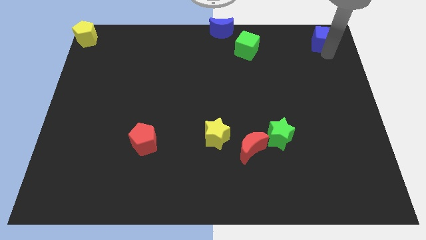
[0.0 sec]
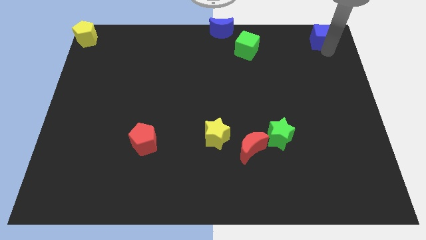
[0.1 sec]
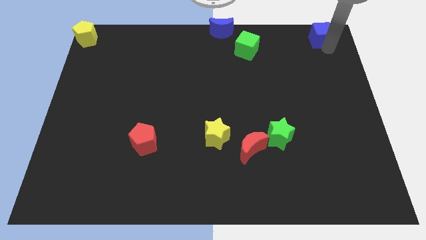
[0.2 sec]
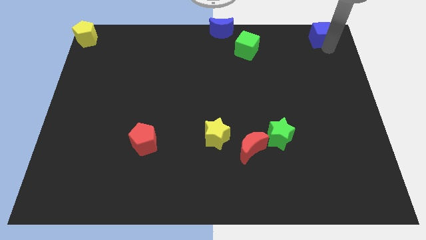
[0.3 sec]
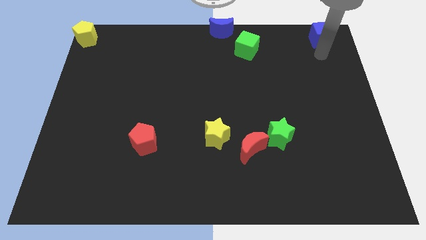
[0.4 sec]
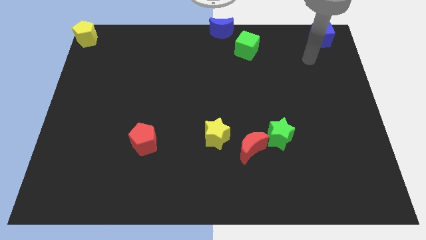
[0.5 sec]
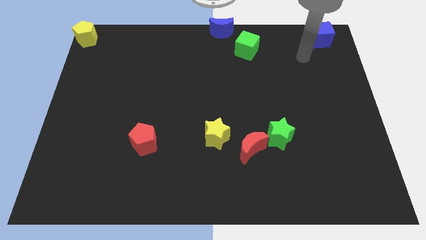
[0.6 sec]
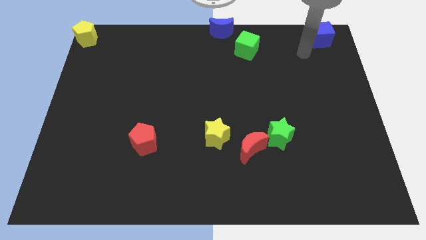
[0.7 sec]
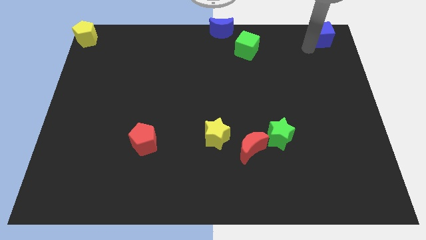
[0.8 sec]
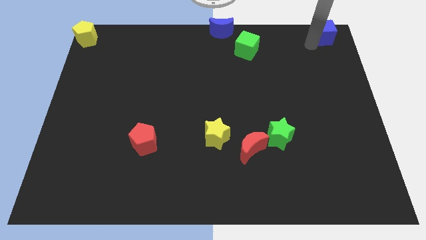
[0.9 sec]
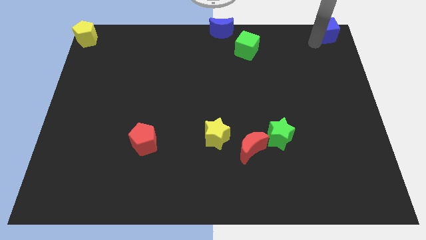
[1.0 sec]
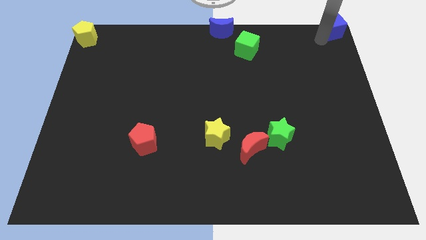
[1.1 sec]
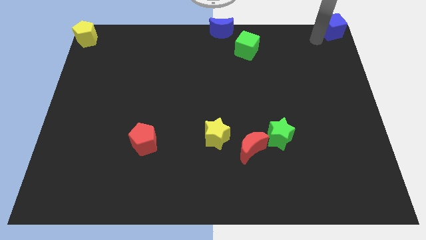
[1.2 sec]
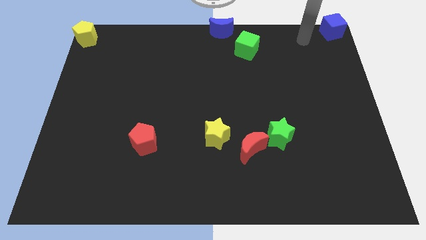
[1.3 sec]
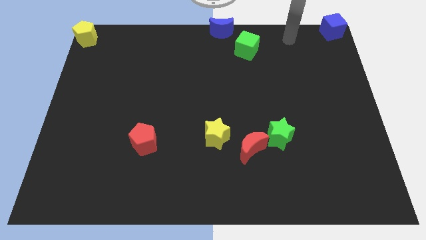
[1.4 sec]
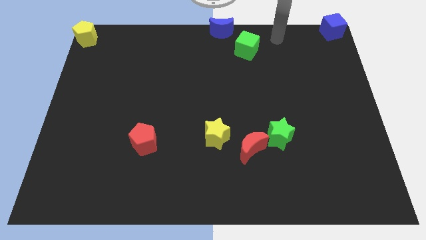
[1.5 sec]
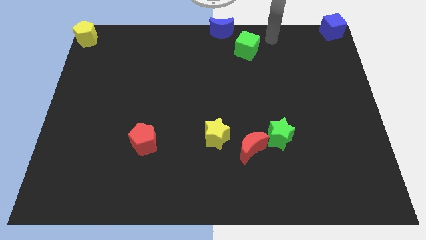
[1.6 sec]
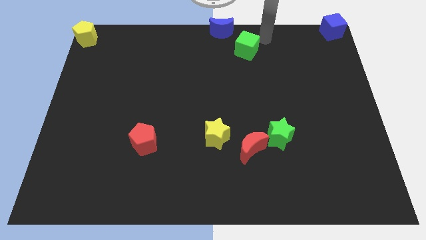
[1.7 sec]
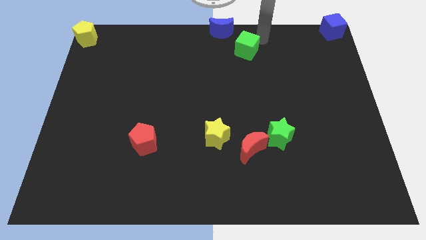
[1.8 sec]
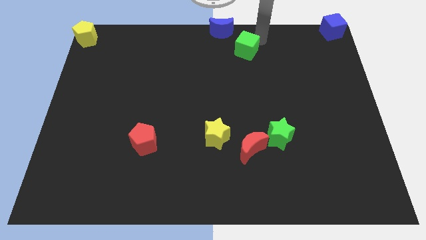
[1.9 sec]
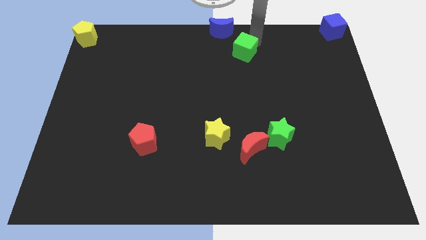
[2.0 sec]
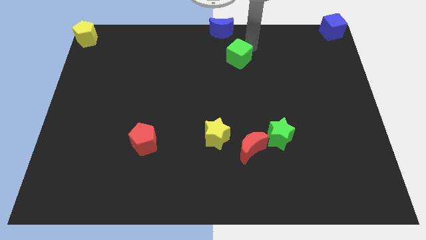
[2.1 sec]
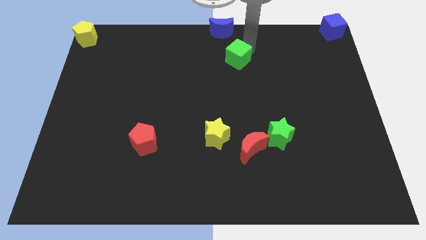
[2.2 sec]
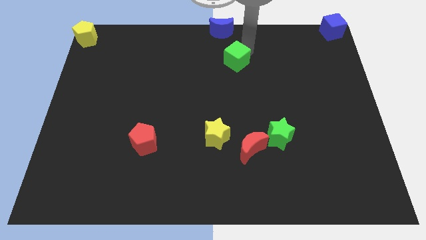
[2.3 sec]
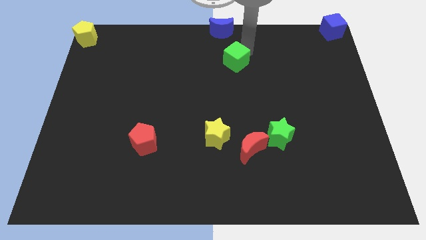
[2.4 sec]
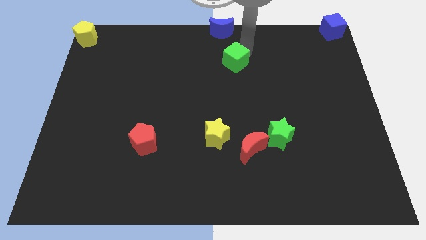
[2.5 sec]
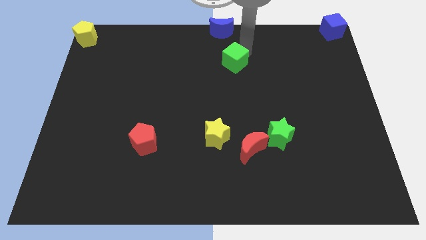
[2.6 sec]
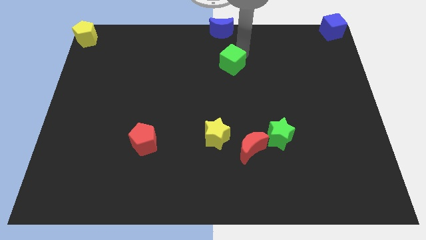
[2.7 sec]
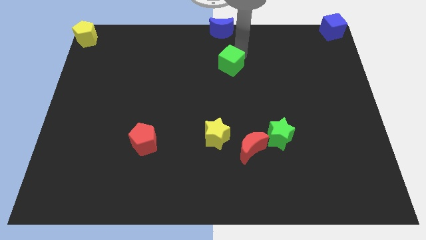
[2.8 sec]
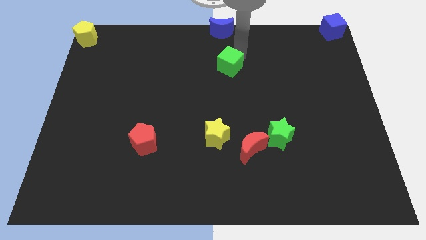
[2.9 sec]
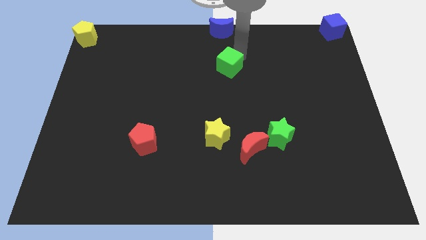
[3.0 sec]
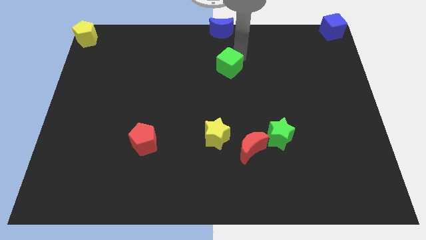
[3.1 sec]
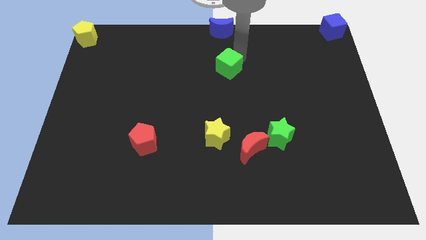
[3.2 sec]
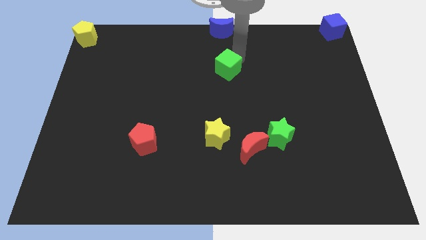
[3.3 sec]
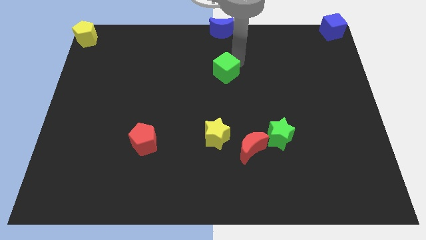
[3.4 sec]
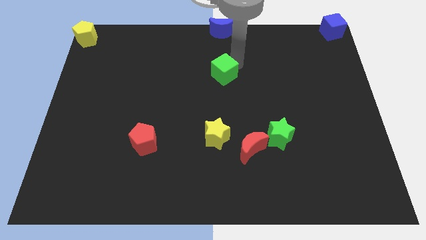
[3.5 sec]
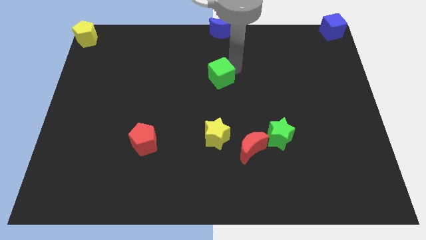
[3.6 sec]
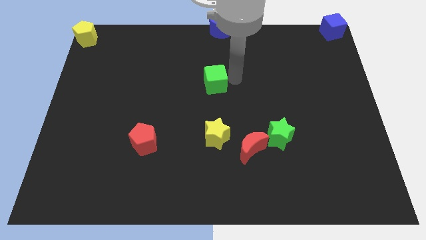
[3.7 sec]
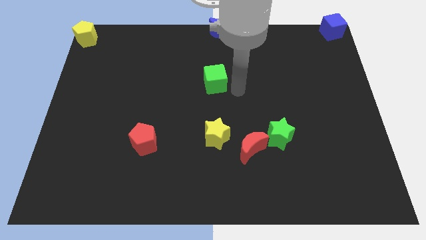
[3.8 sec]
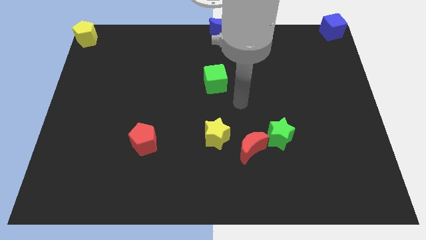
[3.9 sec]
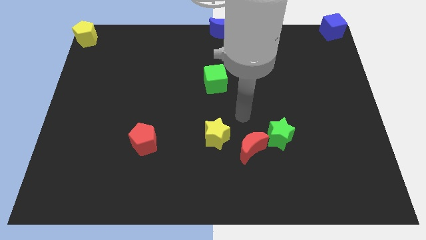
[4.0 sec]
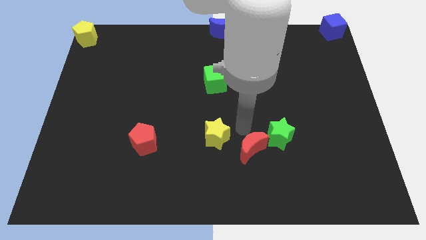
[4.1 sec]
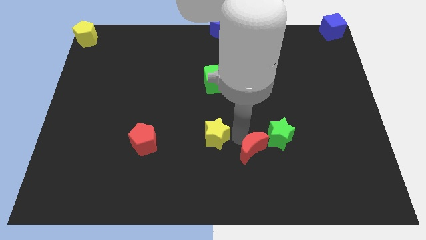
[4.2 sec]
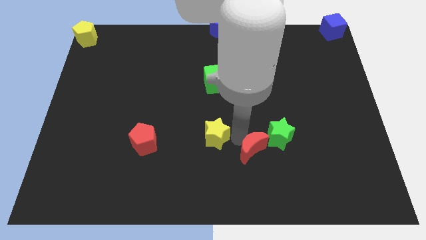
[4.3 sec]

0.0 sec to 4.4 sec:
place the green cube below the blue moon

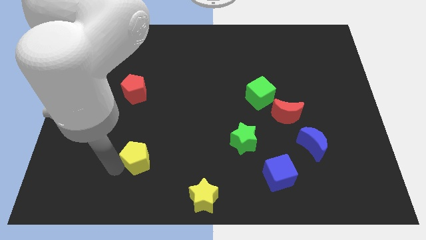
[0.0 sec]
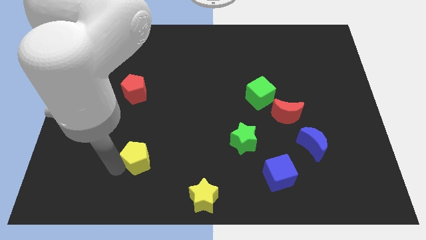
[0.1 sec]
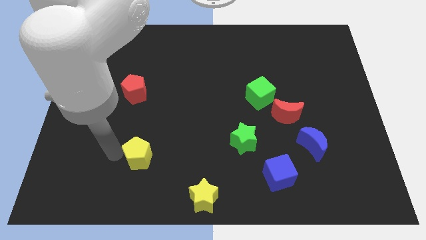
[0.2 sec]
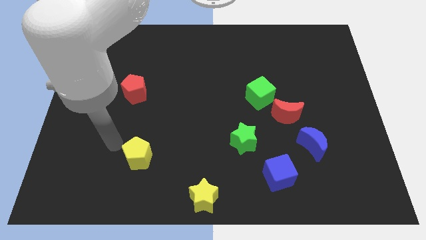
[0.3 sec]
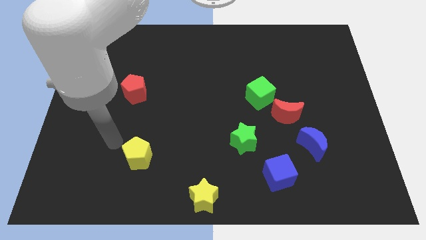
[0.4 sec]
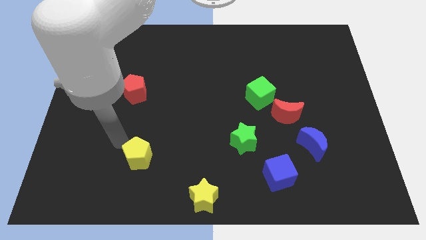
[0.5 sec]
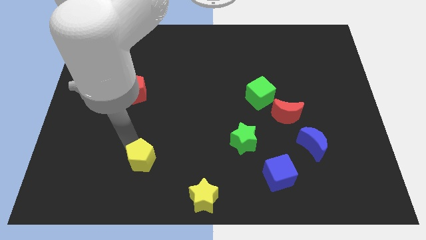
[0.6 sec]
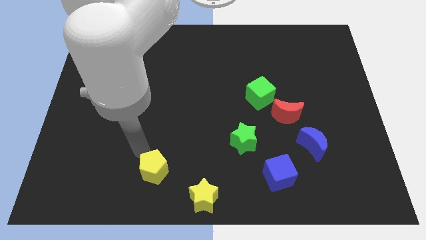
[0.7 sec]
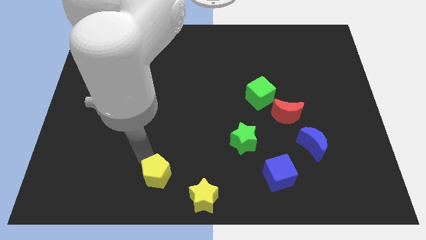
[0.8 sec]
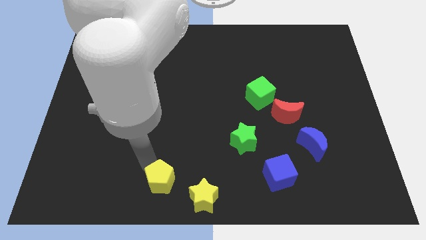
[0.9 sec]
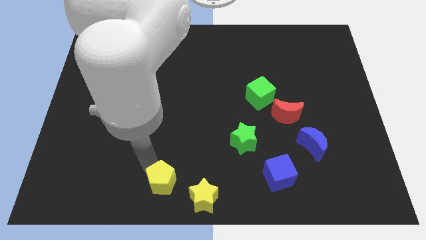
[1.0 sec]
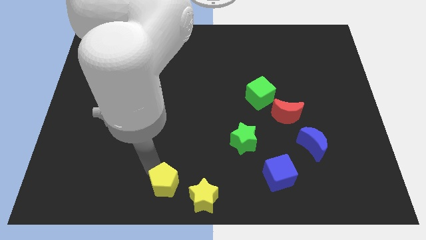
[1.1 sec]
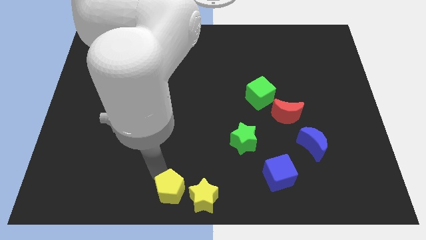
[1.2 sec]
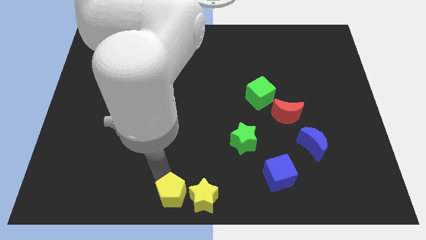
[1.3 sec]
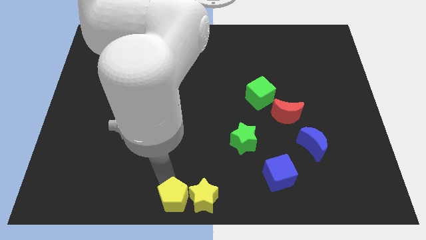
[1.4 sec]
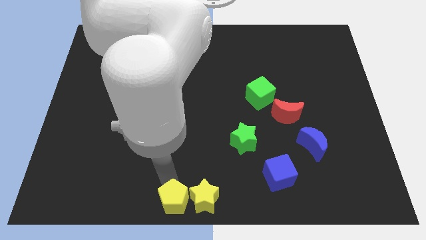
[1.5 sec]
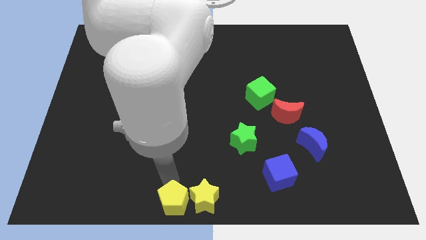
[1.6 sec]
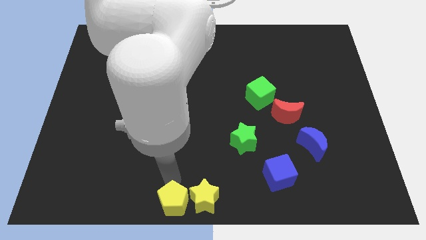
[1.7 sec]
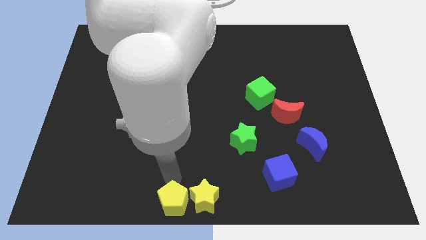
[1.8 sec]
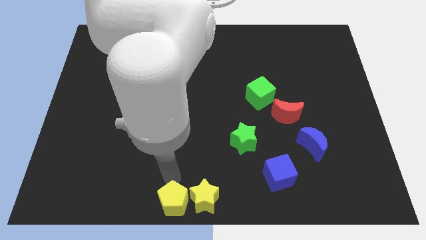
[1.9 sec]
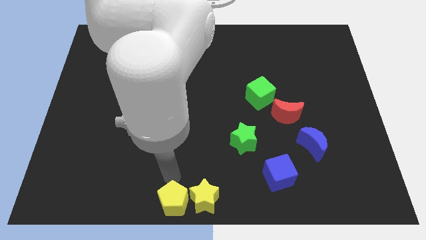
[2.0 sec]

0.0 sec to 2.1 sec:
move the yellow pentagon into the yellow star

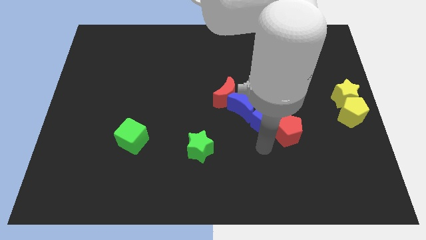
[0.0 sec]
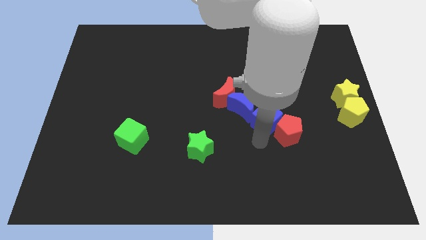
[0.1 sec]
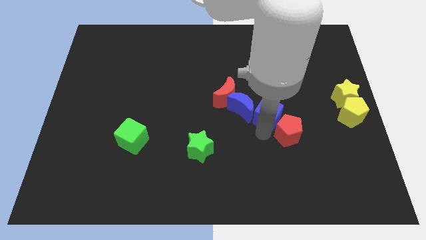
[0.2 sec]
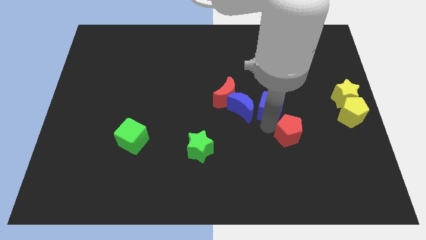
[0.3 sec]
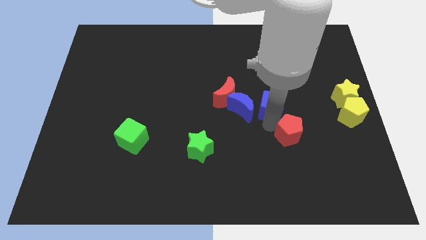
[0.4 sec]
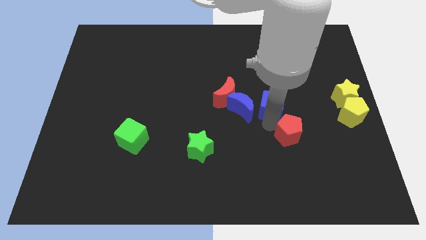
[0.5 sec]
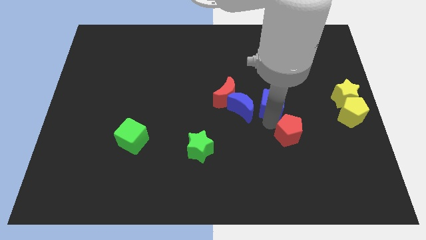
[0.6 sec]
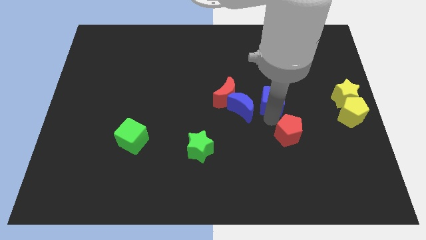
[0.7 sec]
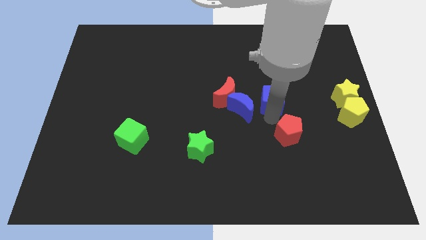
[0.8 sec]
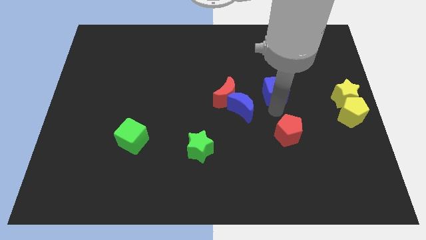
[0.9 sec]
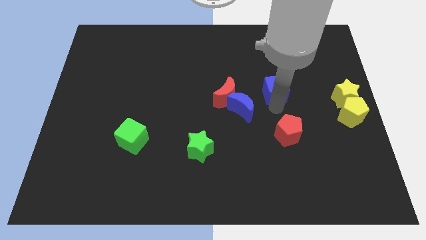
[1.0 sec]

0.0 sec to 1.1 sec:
separate the blue cube from blue moon and red pentagon

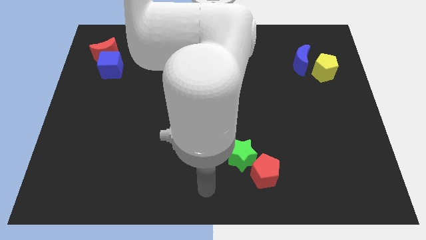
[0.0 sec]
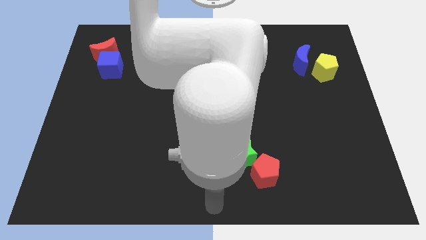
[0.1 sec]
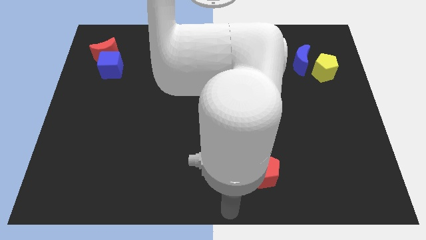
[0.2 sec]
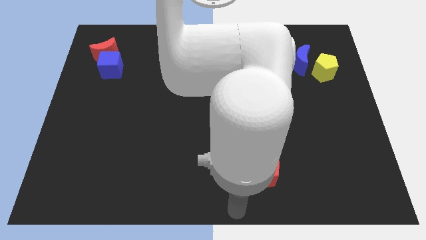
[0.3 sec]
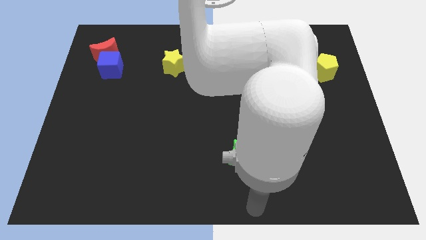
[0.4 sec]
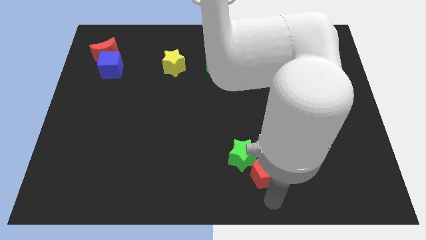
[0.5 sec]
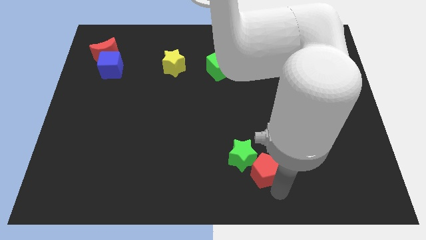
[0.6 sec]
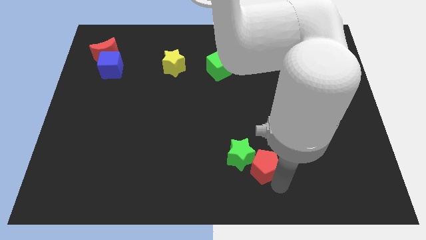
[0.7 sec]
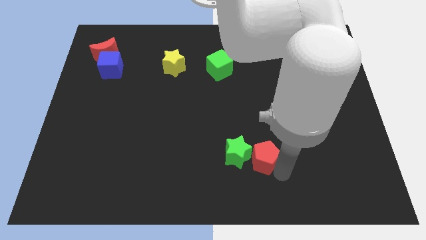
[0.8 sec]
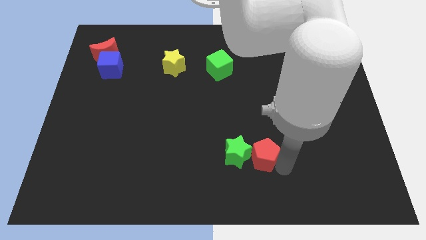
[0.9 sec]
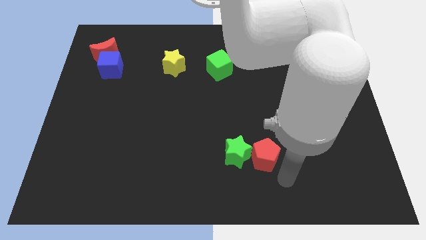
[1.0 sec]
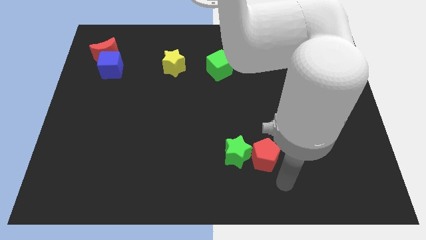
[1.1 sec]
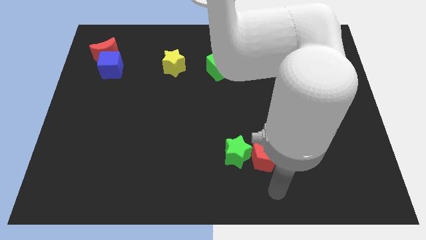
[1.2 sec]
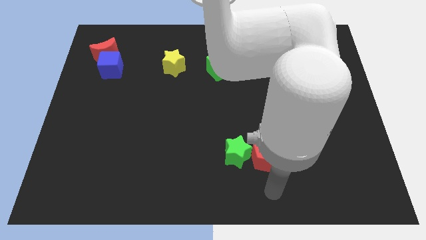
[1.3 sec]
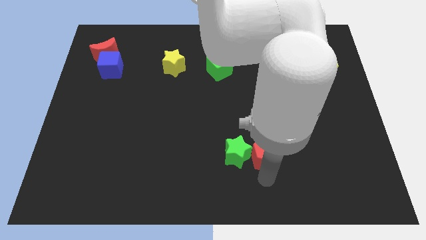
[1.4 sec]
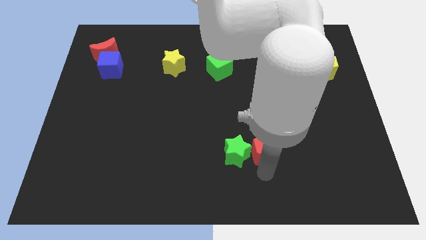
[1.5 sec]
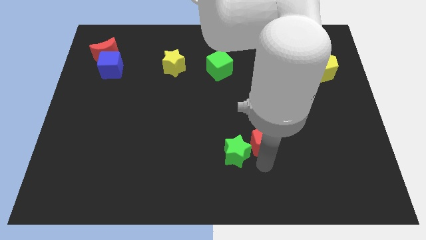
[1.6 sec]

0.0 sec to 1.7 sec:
push the red pentagon to the right of the green star
